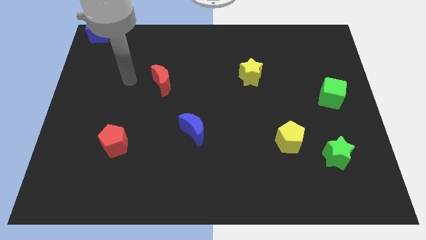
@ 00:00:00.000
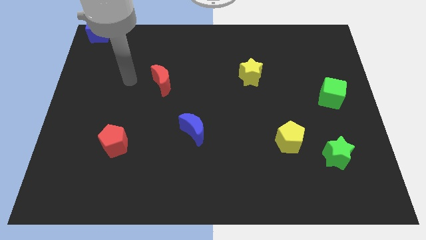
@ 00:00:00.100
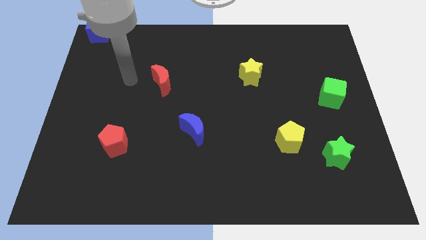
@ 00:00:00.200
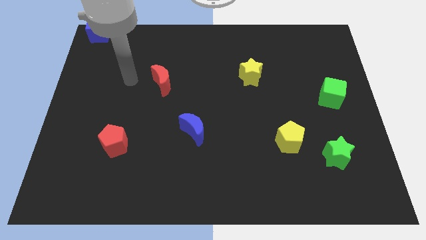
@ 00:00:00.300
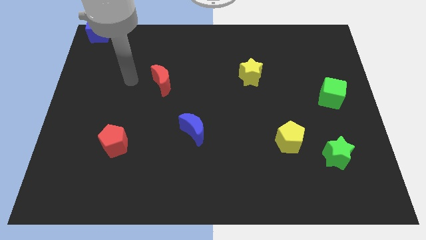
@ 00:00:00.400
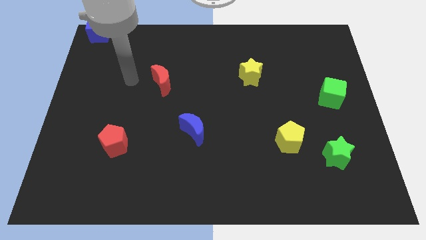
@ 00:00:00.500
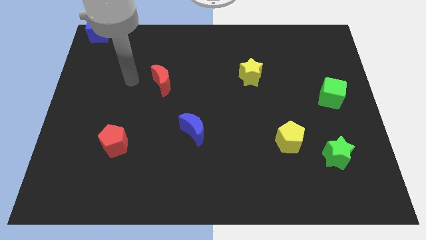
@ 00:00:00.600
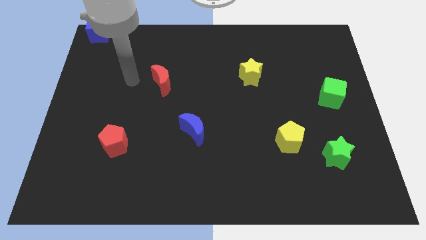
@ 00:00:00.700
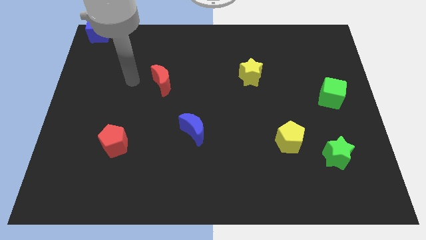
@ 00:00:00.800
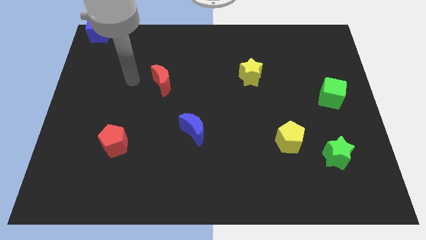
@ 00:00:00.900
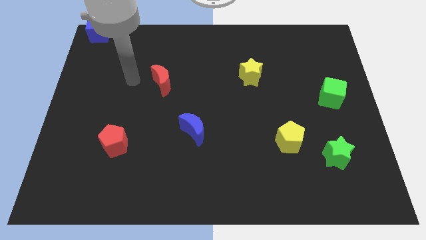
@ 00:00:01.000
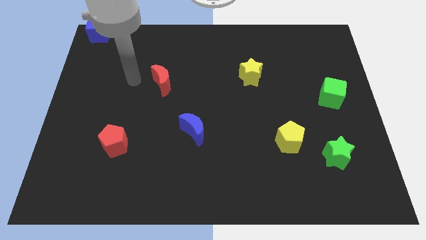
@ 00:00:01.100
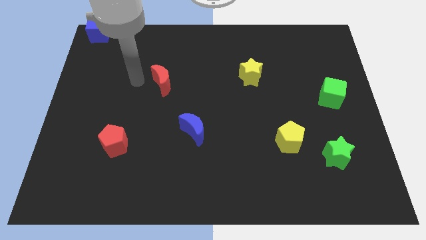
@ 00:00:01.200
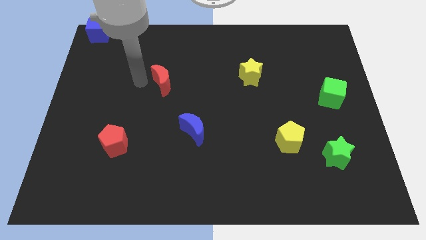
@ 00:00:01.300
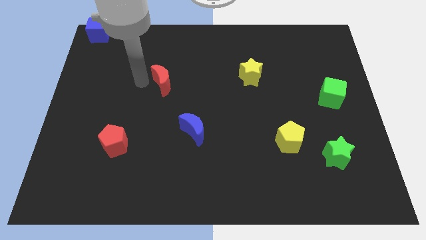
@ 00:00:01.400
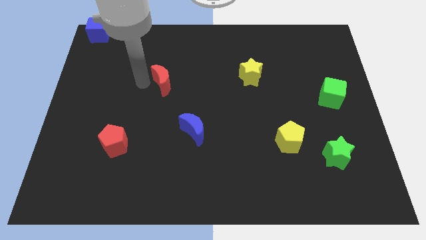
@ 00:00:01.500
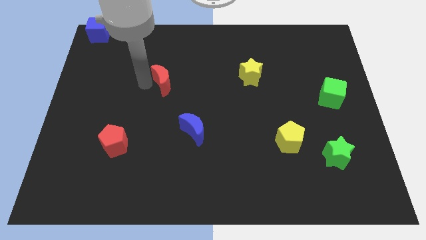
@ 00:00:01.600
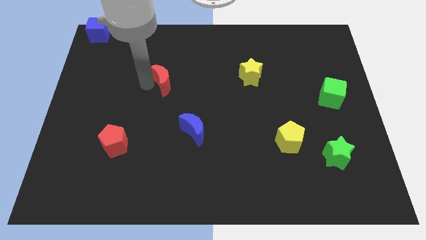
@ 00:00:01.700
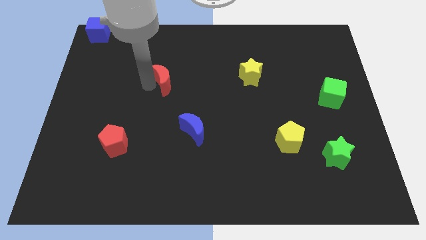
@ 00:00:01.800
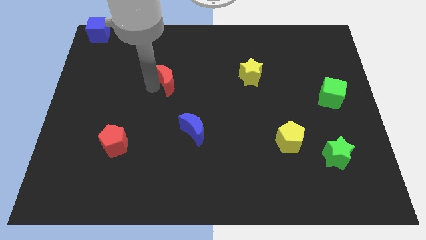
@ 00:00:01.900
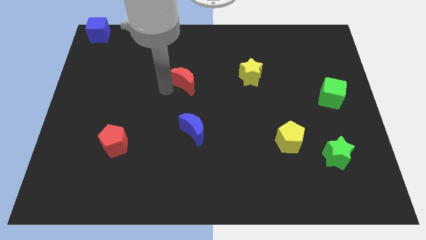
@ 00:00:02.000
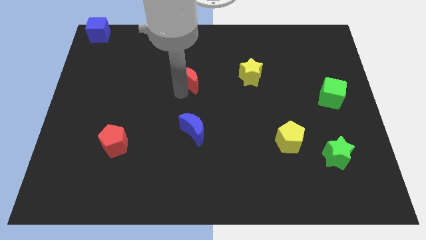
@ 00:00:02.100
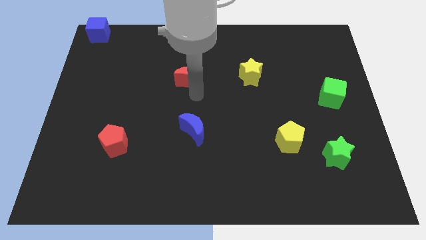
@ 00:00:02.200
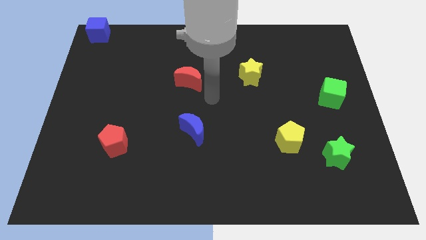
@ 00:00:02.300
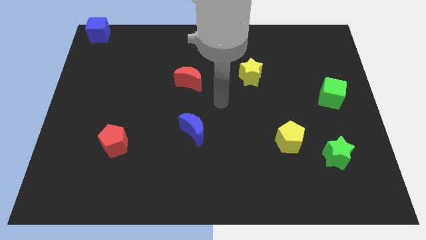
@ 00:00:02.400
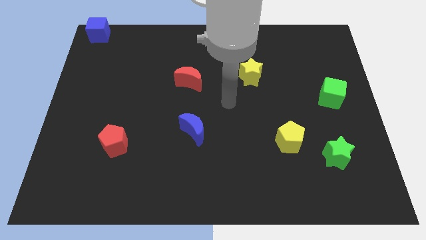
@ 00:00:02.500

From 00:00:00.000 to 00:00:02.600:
slightly push the red moon above blue moon

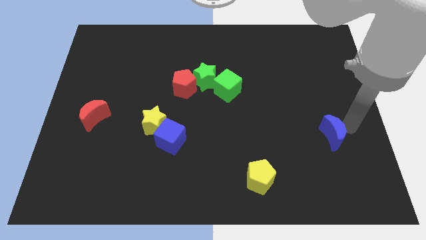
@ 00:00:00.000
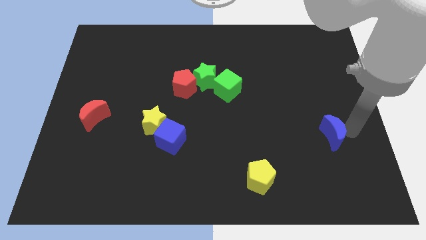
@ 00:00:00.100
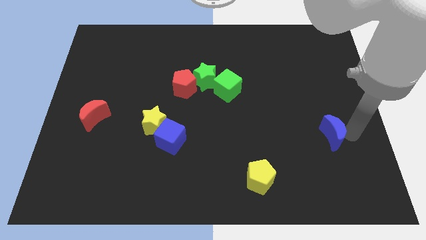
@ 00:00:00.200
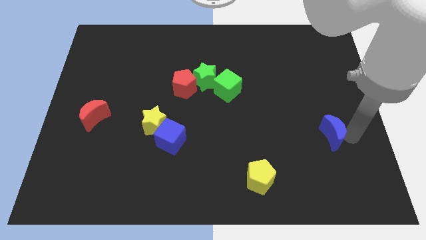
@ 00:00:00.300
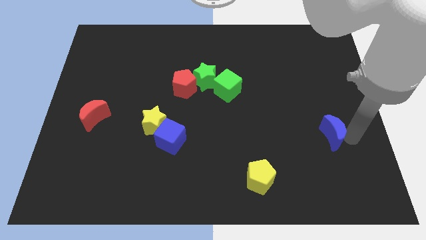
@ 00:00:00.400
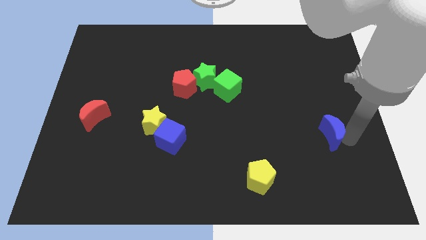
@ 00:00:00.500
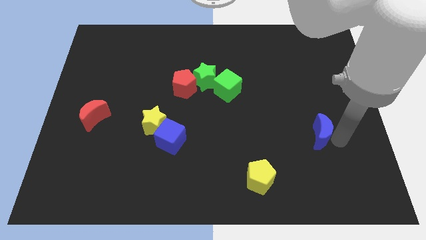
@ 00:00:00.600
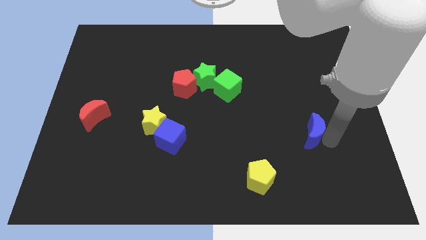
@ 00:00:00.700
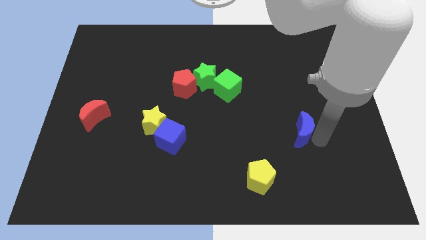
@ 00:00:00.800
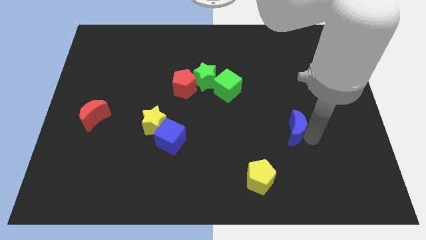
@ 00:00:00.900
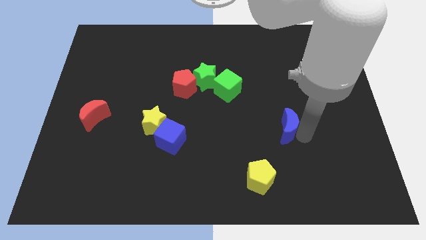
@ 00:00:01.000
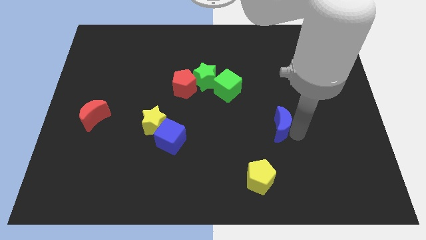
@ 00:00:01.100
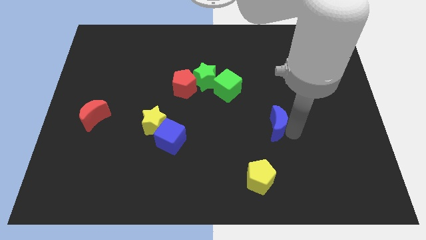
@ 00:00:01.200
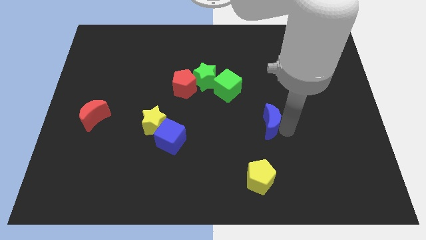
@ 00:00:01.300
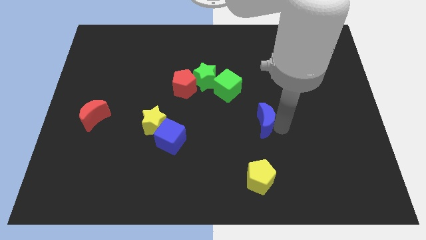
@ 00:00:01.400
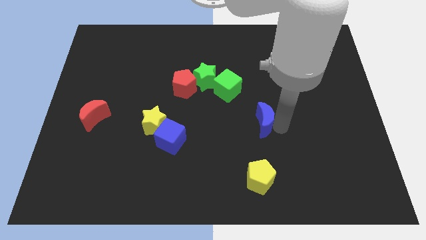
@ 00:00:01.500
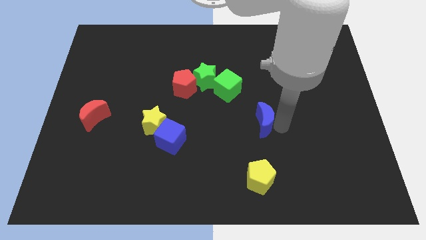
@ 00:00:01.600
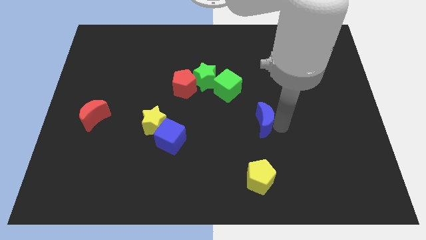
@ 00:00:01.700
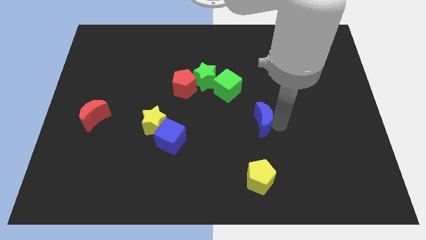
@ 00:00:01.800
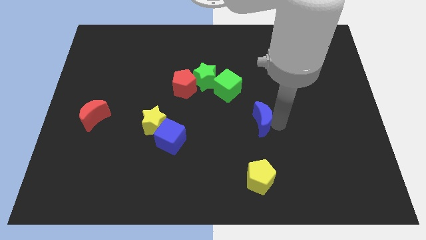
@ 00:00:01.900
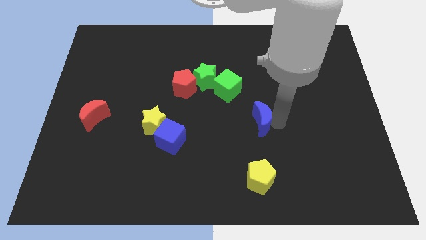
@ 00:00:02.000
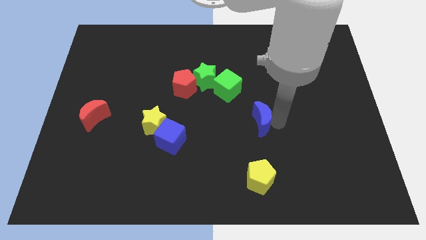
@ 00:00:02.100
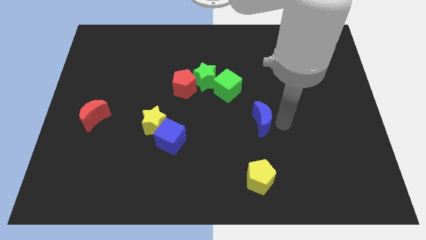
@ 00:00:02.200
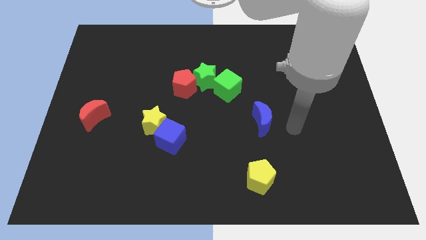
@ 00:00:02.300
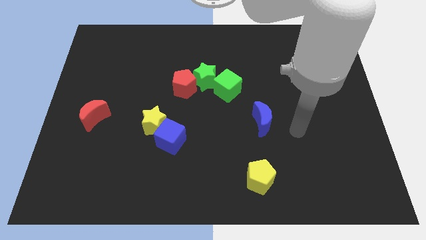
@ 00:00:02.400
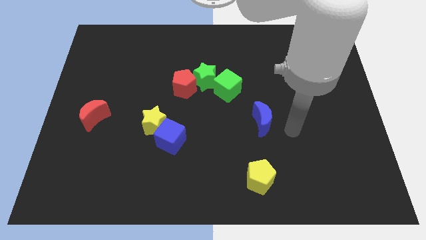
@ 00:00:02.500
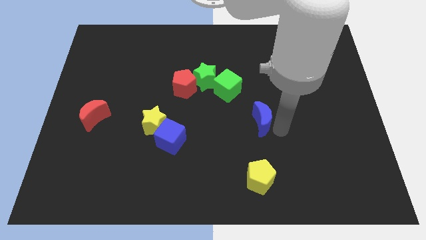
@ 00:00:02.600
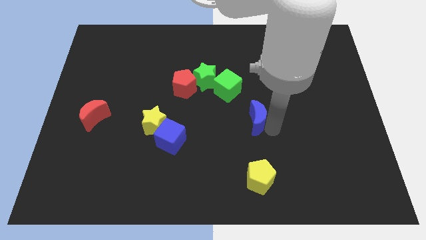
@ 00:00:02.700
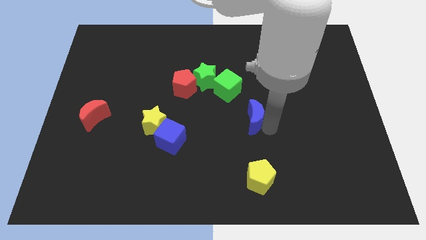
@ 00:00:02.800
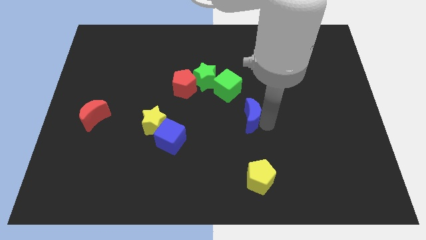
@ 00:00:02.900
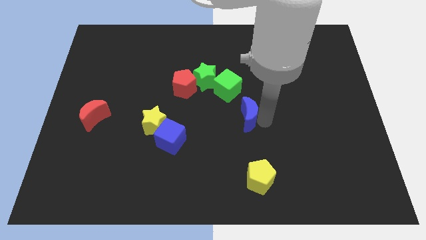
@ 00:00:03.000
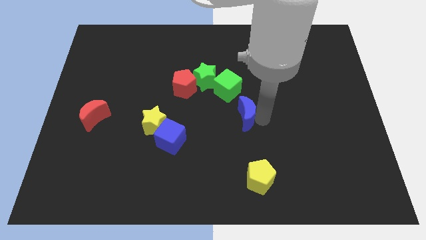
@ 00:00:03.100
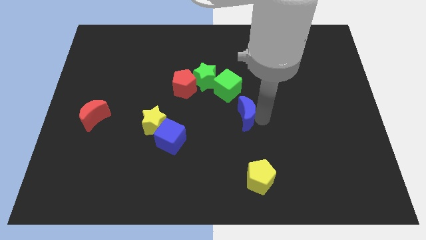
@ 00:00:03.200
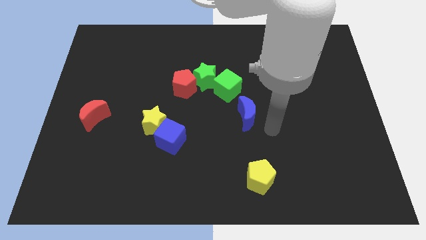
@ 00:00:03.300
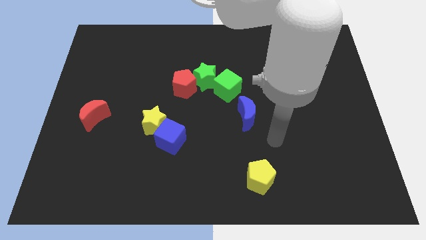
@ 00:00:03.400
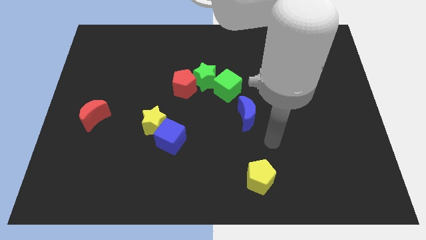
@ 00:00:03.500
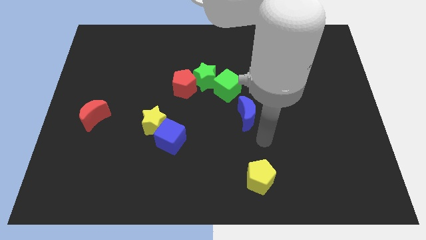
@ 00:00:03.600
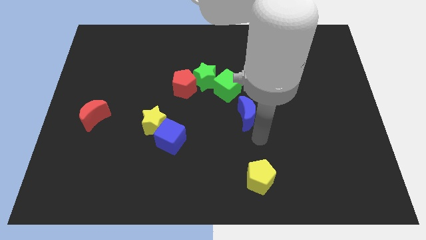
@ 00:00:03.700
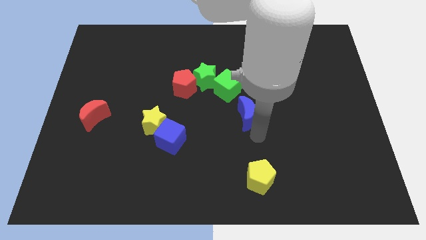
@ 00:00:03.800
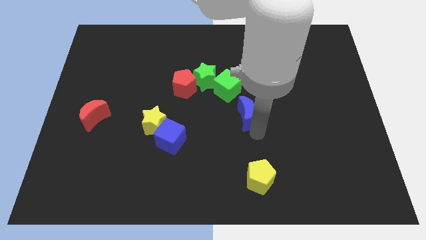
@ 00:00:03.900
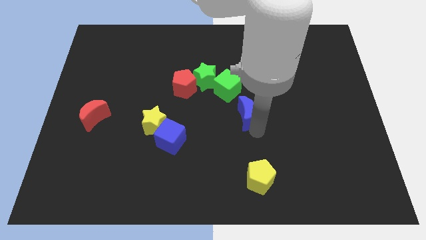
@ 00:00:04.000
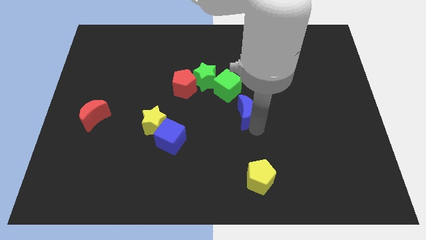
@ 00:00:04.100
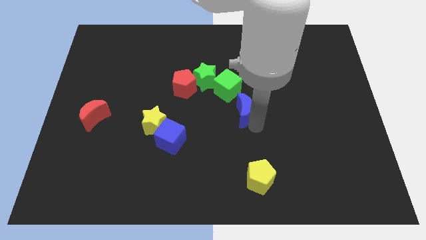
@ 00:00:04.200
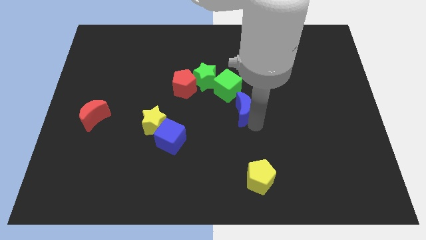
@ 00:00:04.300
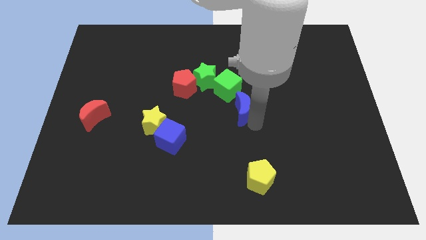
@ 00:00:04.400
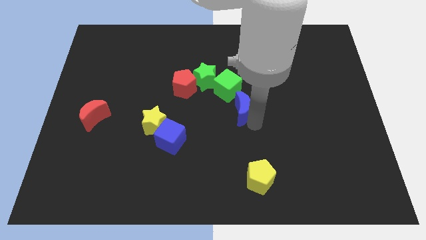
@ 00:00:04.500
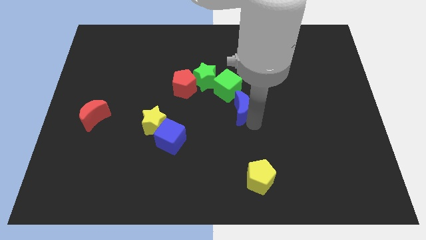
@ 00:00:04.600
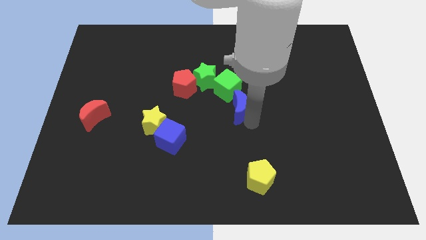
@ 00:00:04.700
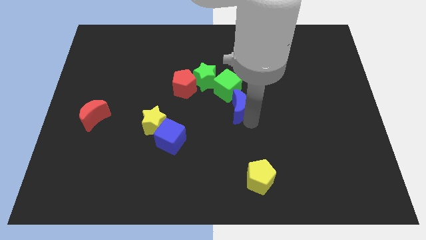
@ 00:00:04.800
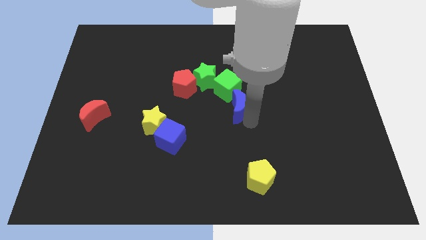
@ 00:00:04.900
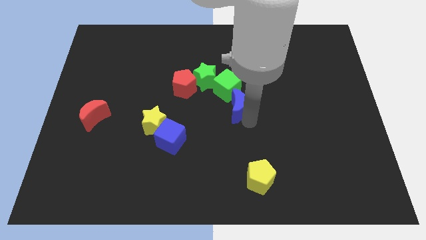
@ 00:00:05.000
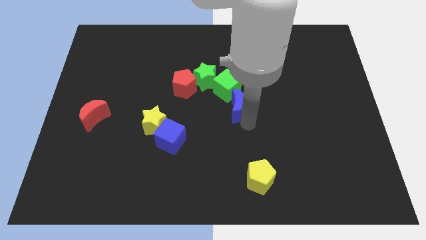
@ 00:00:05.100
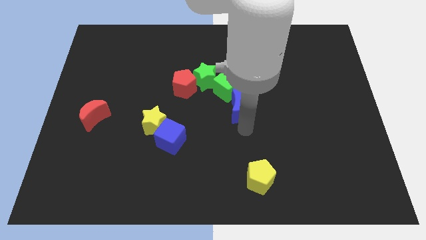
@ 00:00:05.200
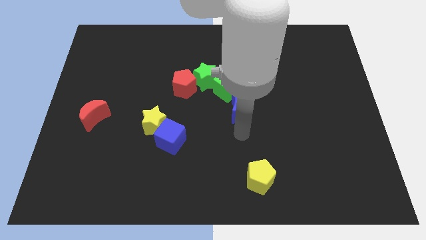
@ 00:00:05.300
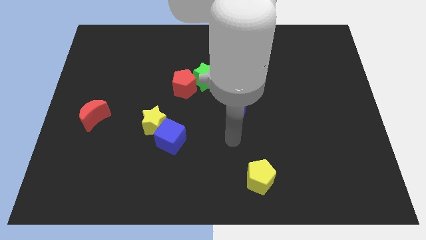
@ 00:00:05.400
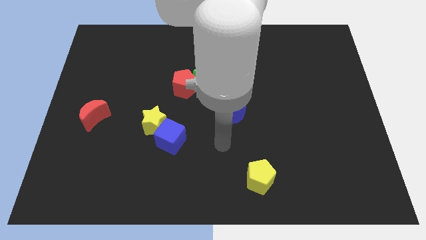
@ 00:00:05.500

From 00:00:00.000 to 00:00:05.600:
move the blue crescent into the green cube

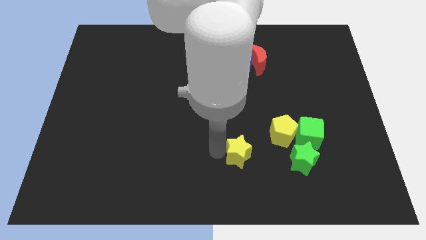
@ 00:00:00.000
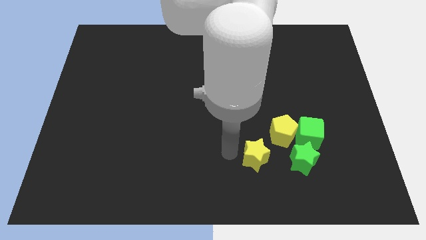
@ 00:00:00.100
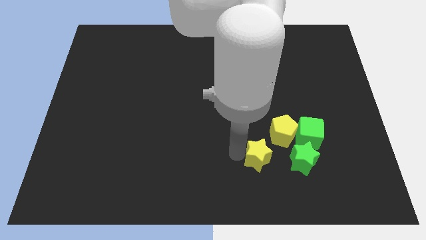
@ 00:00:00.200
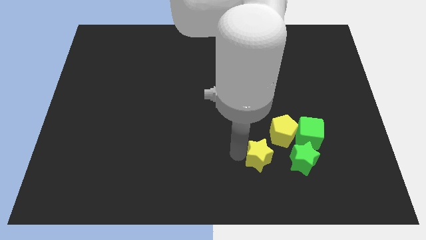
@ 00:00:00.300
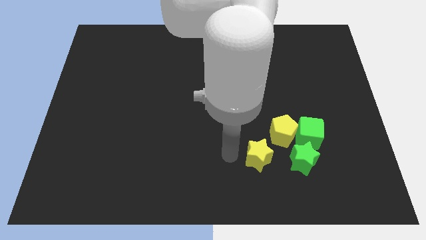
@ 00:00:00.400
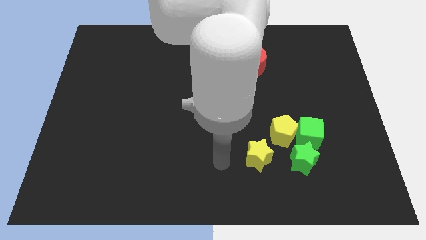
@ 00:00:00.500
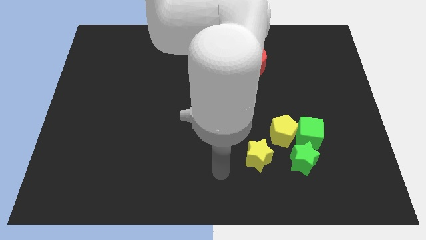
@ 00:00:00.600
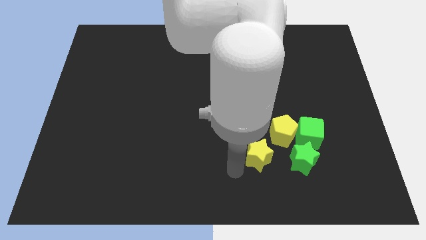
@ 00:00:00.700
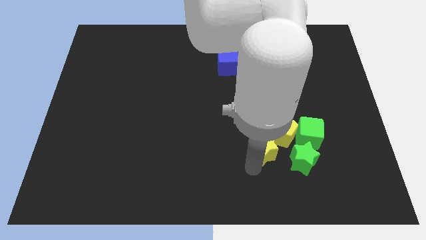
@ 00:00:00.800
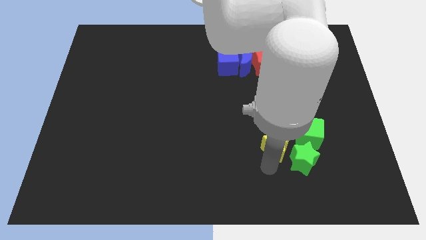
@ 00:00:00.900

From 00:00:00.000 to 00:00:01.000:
place the yellow star under the yellow pentagon
